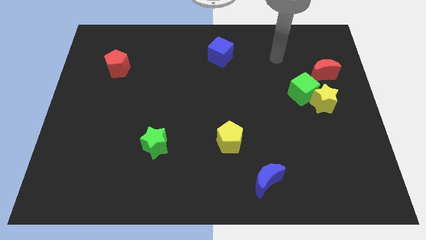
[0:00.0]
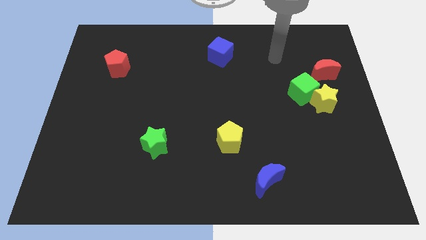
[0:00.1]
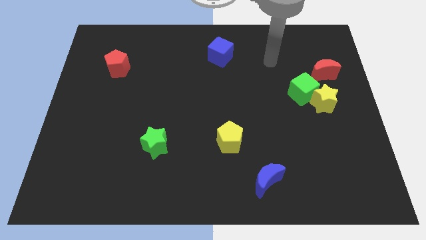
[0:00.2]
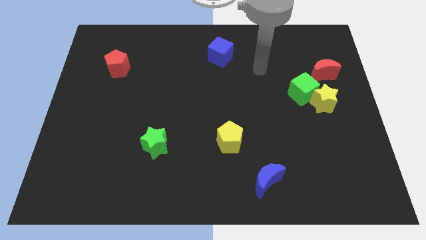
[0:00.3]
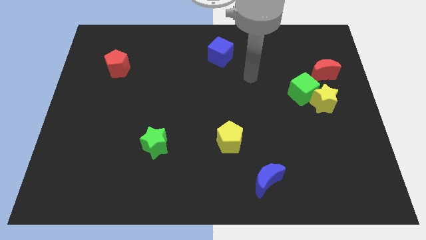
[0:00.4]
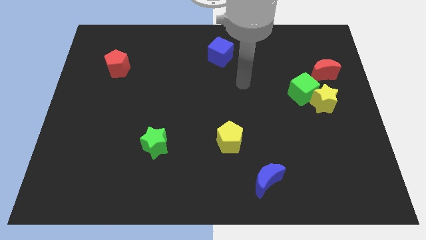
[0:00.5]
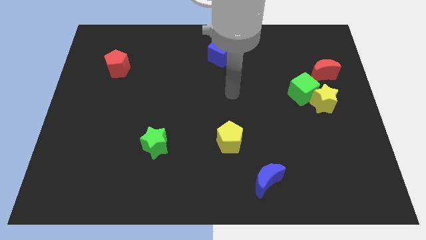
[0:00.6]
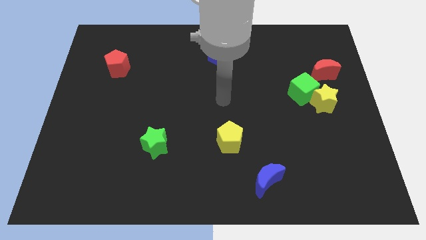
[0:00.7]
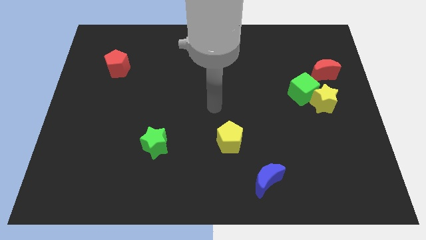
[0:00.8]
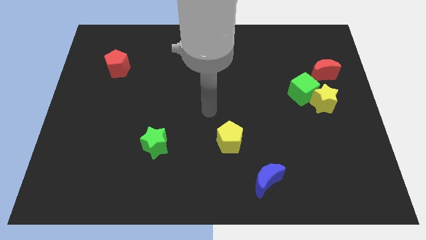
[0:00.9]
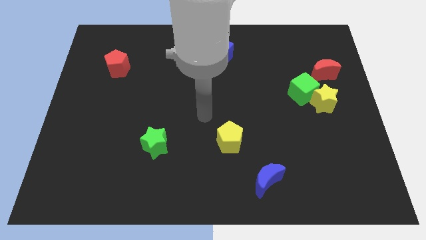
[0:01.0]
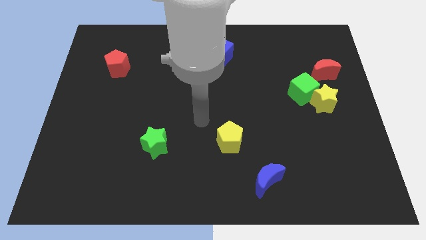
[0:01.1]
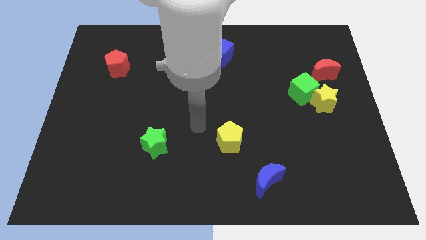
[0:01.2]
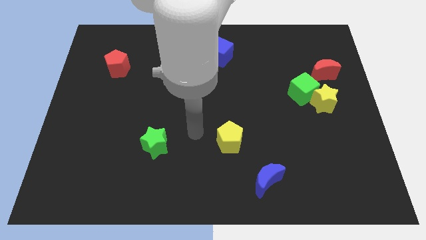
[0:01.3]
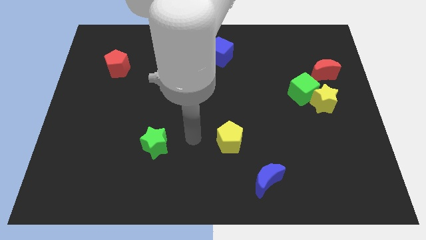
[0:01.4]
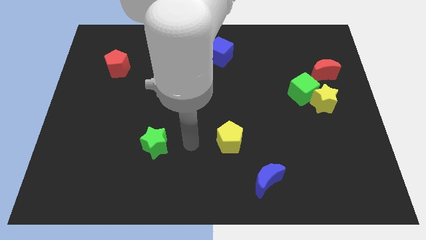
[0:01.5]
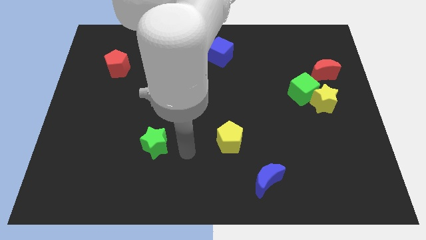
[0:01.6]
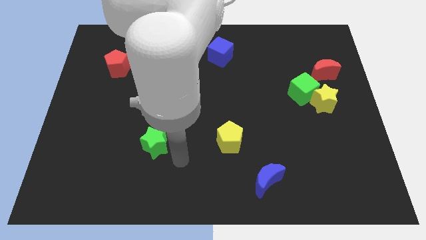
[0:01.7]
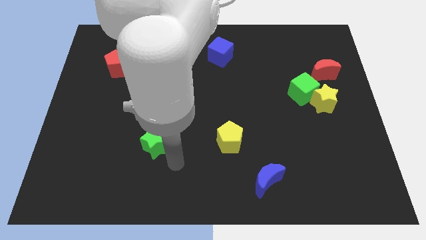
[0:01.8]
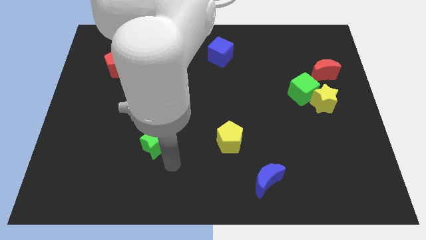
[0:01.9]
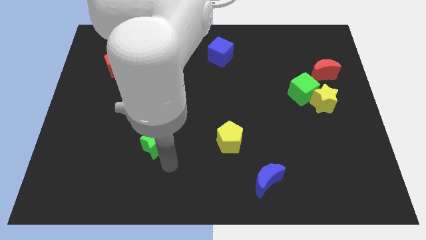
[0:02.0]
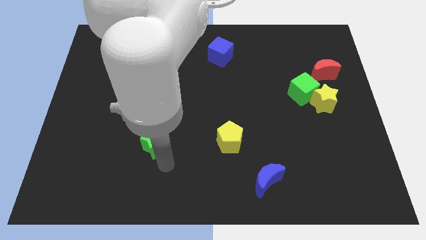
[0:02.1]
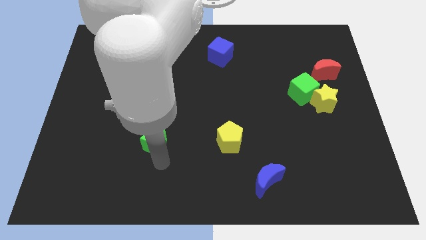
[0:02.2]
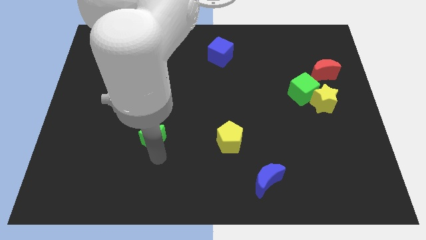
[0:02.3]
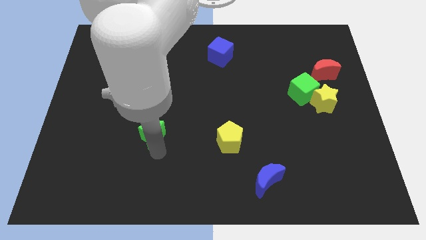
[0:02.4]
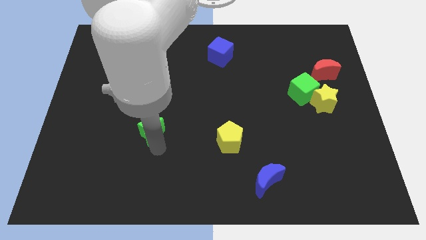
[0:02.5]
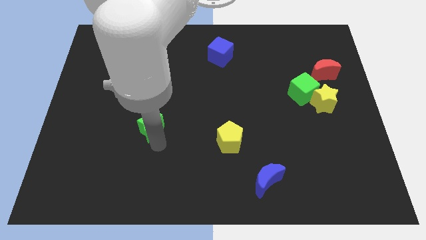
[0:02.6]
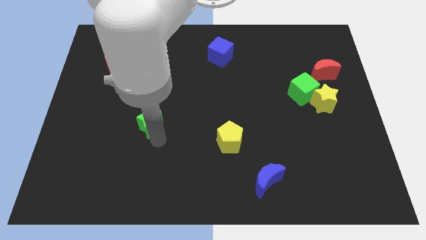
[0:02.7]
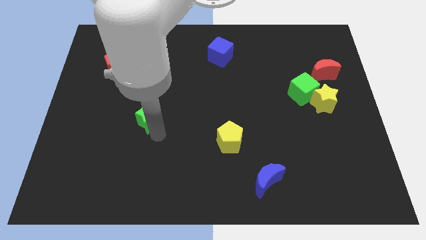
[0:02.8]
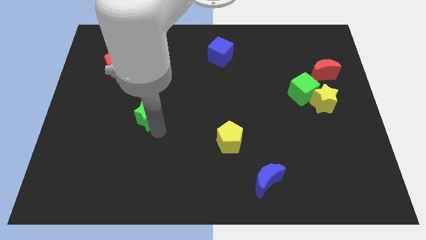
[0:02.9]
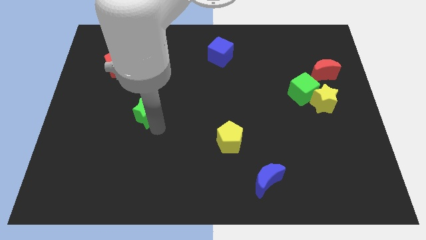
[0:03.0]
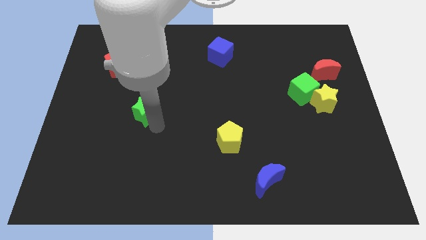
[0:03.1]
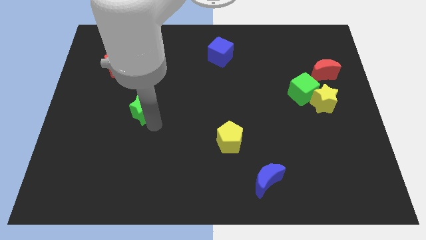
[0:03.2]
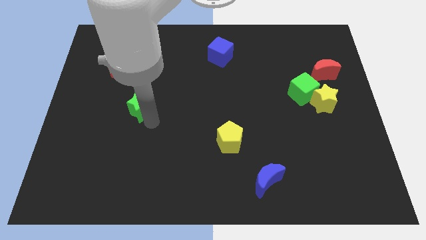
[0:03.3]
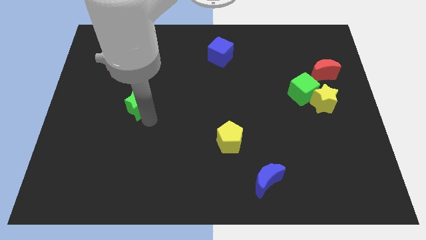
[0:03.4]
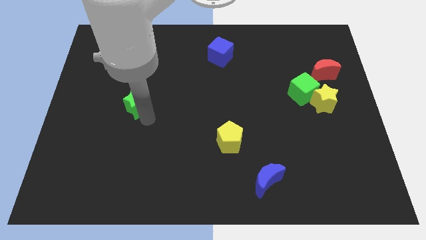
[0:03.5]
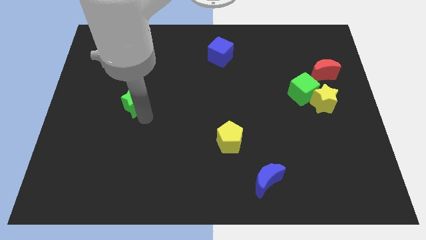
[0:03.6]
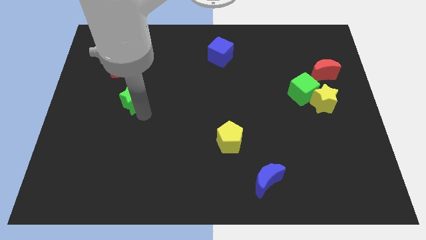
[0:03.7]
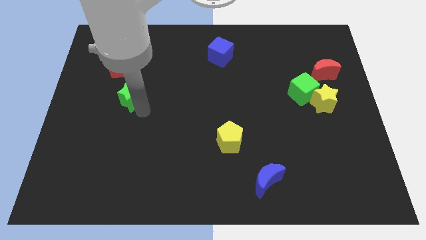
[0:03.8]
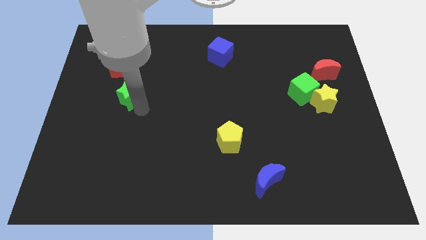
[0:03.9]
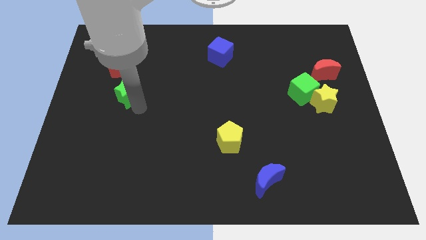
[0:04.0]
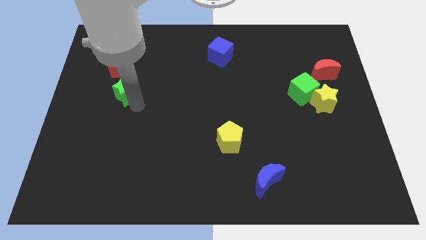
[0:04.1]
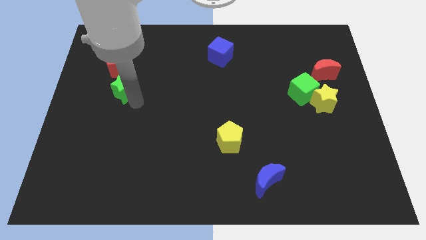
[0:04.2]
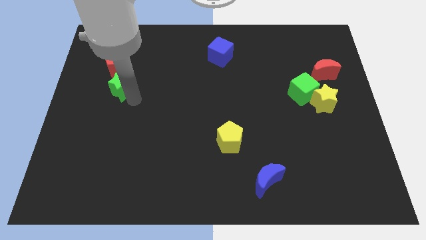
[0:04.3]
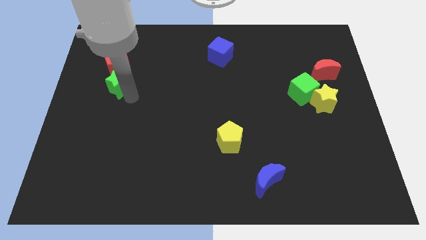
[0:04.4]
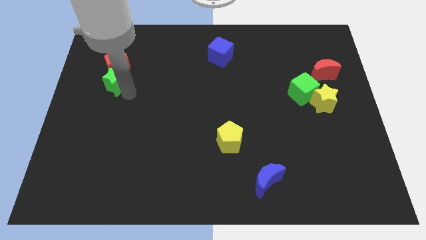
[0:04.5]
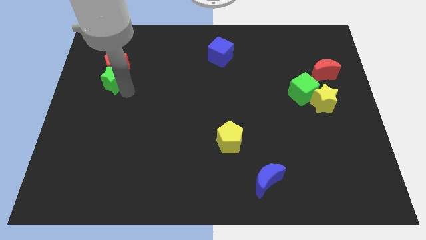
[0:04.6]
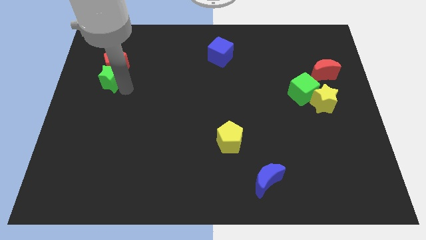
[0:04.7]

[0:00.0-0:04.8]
put the green star to the red pentagon

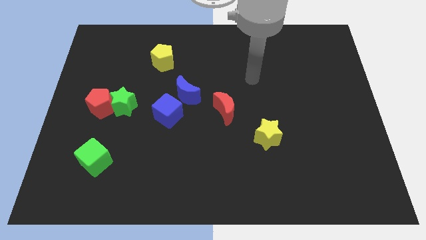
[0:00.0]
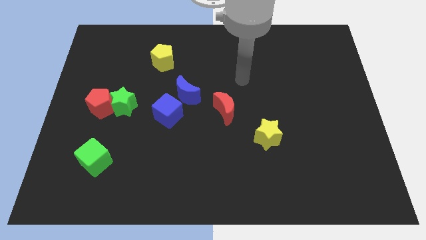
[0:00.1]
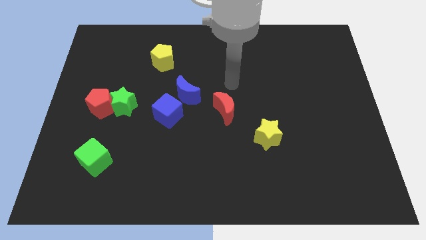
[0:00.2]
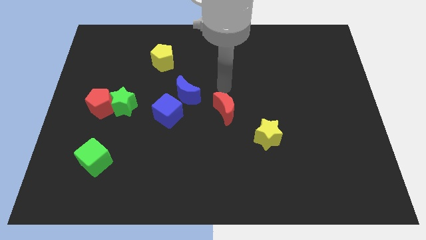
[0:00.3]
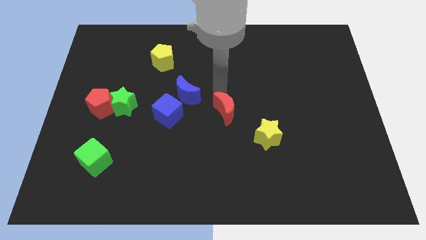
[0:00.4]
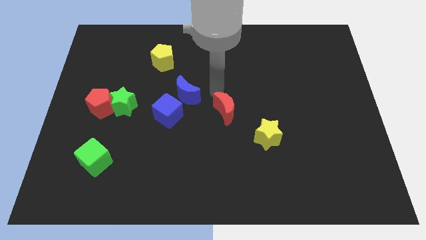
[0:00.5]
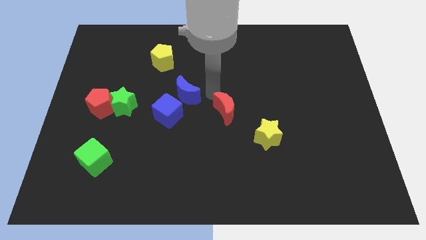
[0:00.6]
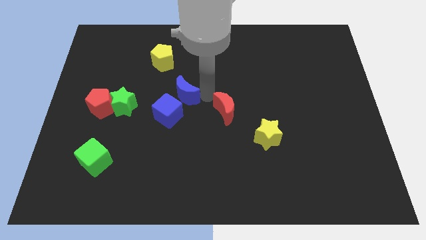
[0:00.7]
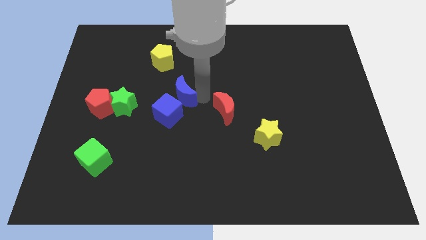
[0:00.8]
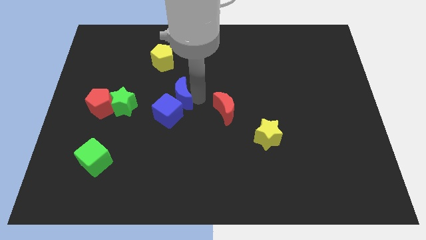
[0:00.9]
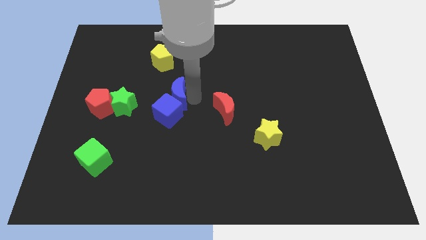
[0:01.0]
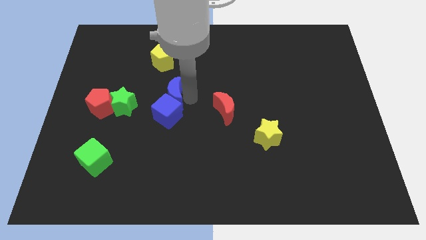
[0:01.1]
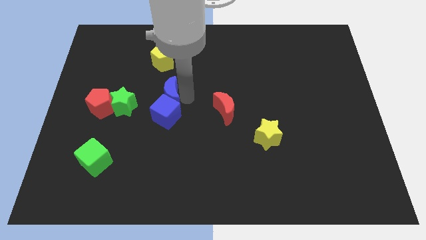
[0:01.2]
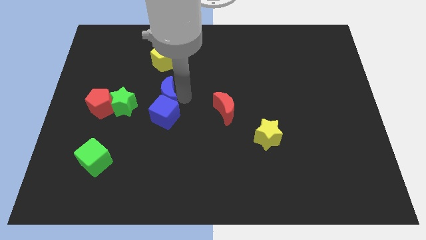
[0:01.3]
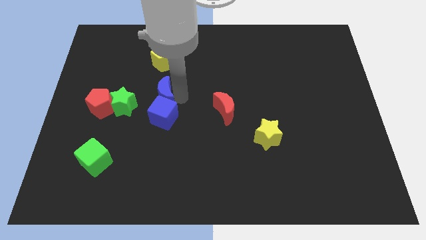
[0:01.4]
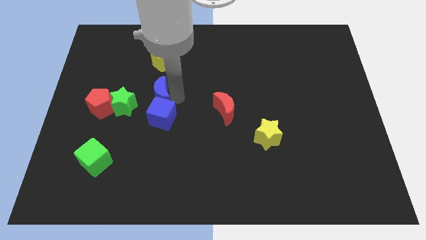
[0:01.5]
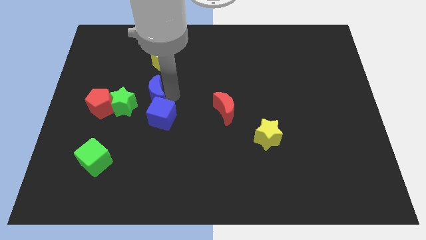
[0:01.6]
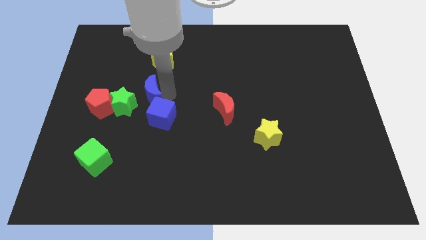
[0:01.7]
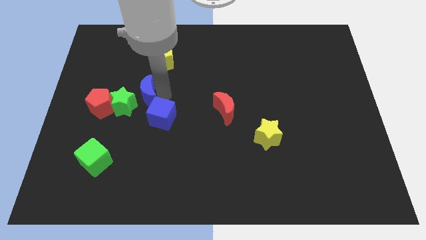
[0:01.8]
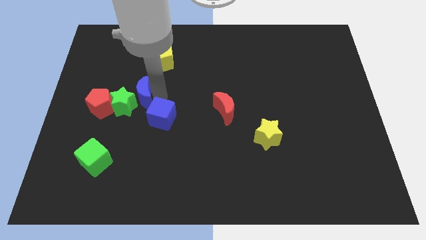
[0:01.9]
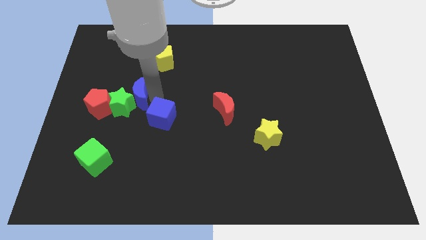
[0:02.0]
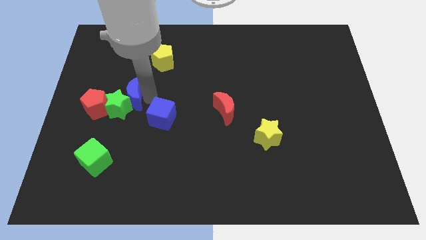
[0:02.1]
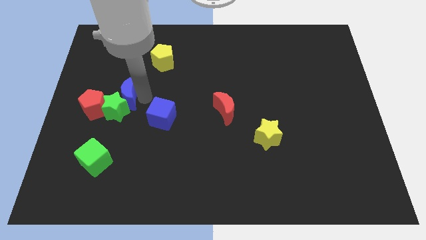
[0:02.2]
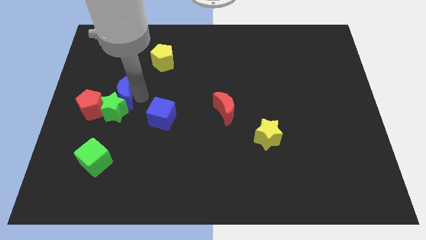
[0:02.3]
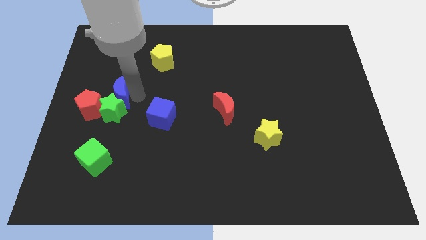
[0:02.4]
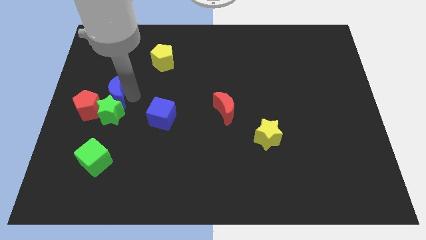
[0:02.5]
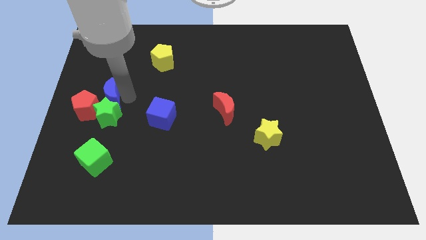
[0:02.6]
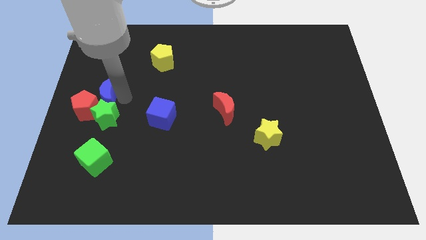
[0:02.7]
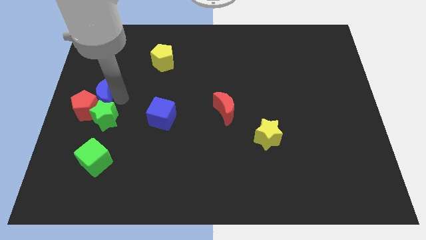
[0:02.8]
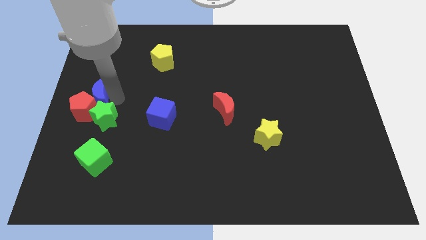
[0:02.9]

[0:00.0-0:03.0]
push the blue moon next to the red pentagon
